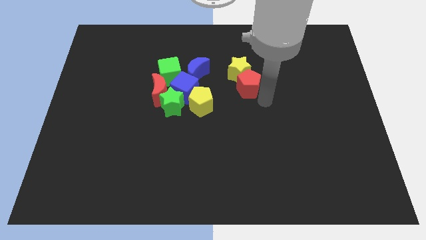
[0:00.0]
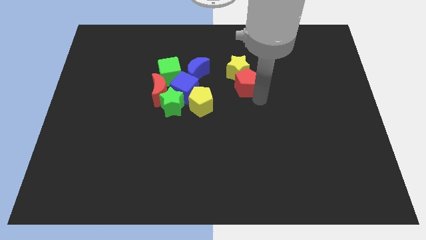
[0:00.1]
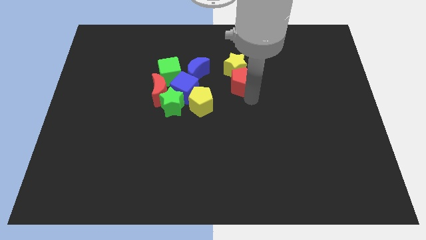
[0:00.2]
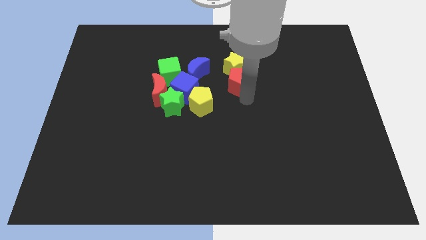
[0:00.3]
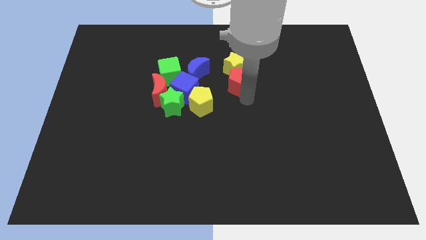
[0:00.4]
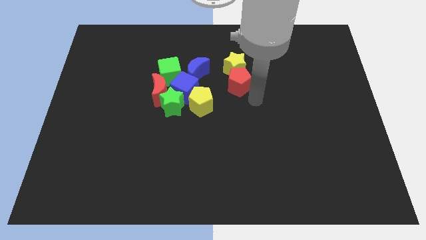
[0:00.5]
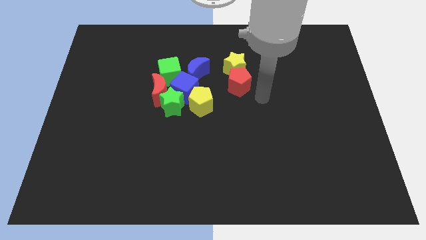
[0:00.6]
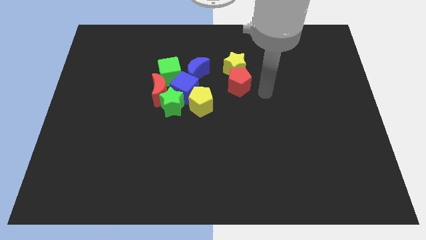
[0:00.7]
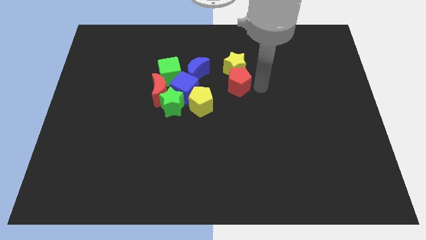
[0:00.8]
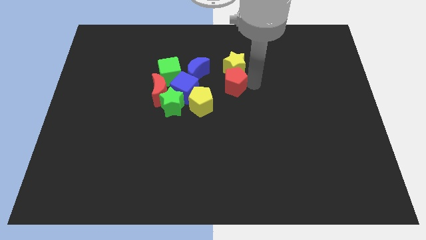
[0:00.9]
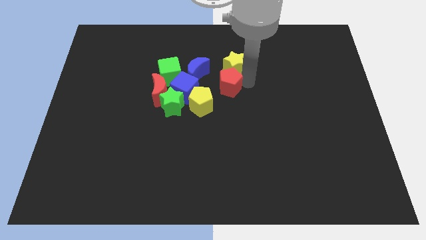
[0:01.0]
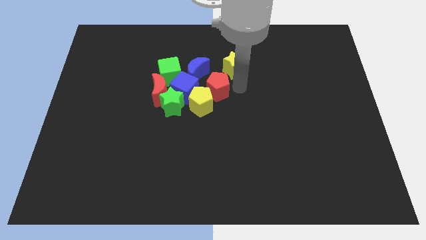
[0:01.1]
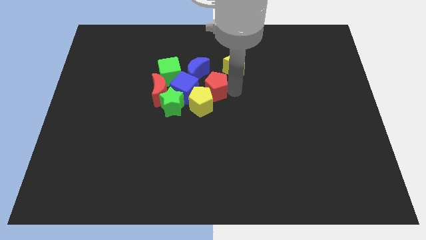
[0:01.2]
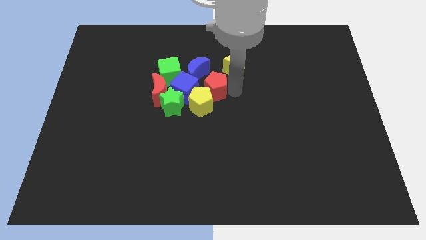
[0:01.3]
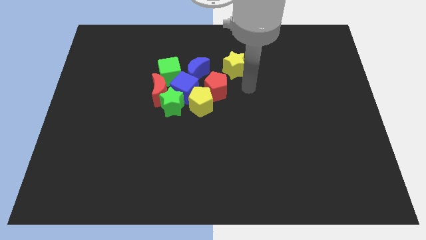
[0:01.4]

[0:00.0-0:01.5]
separate the red pentagon from the yellow star

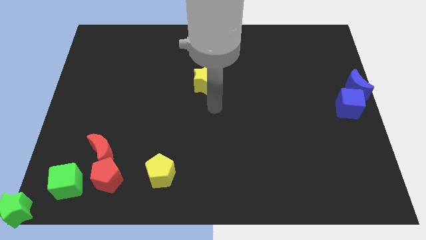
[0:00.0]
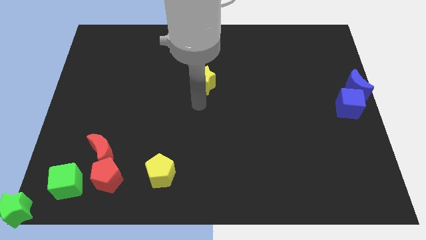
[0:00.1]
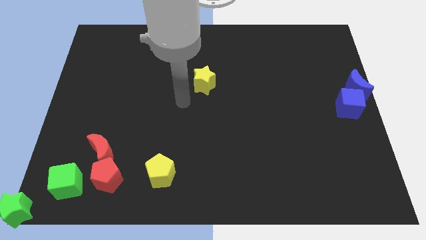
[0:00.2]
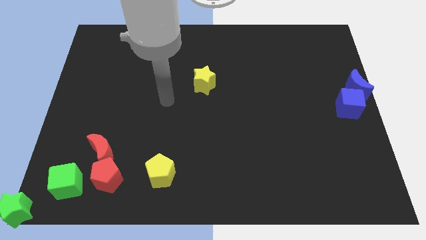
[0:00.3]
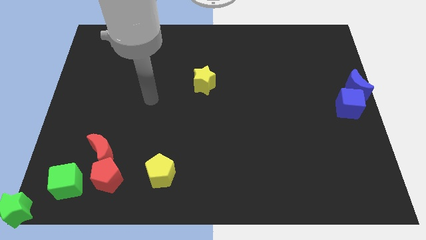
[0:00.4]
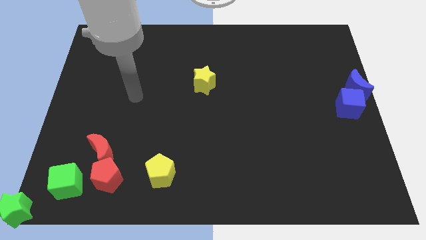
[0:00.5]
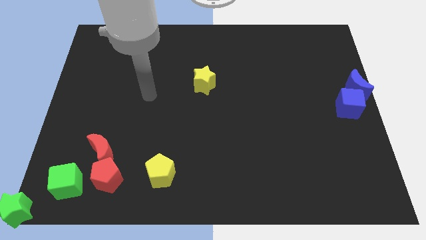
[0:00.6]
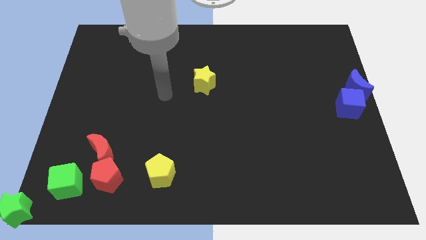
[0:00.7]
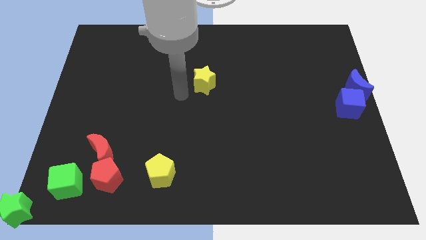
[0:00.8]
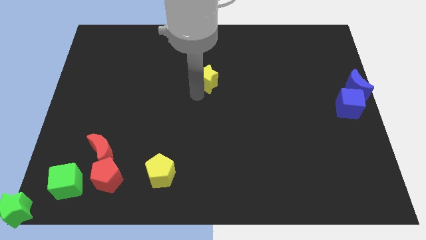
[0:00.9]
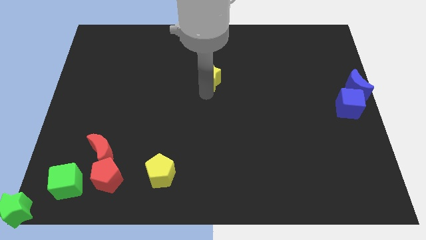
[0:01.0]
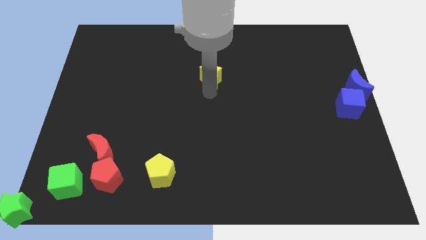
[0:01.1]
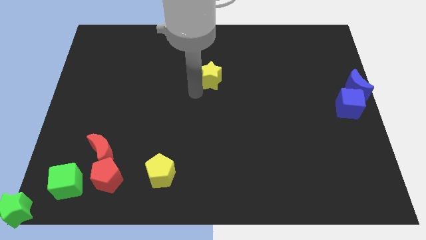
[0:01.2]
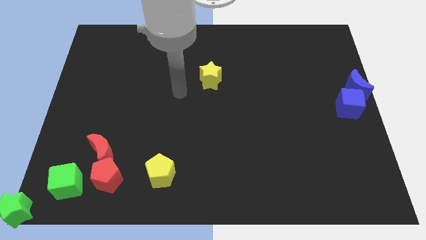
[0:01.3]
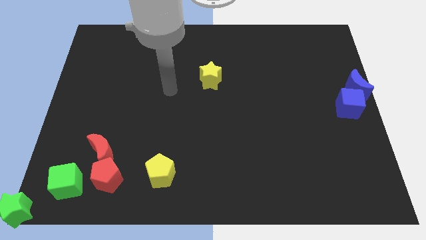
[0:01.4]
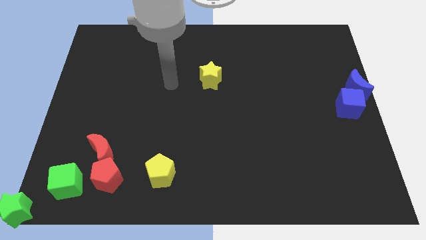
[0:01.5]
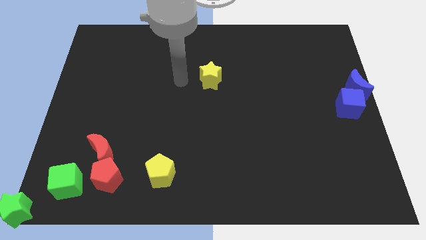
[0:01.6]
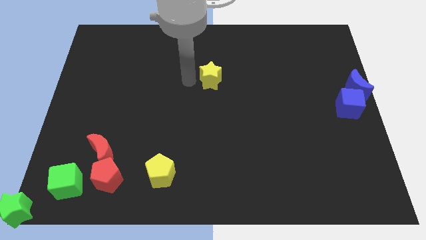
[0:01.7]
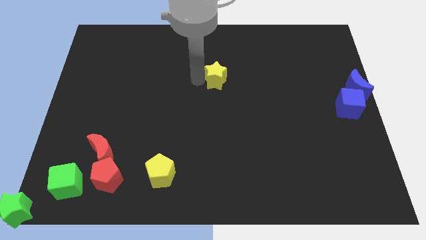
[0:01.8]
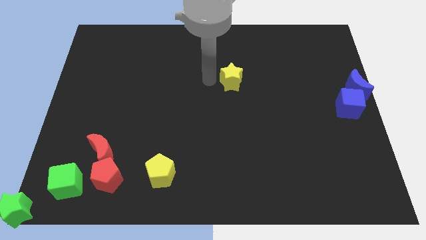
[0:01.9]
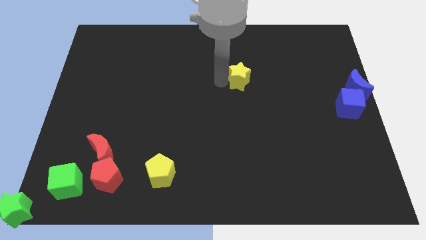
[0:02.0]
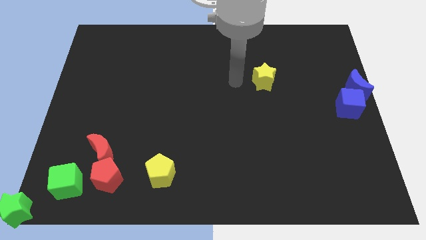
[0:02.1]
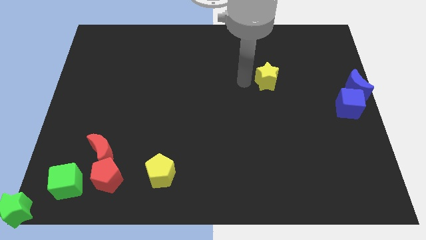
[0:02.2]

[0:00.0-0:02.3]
move the yellow star towards the right side

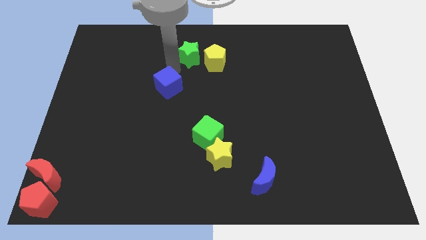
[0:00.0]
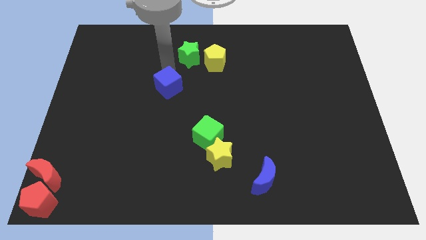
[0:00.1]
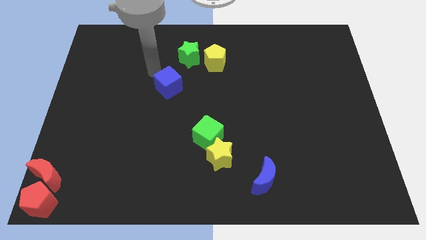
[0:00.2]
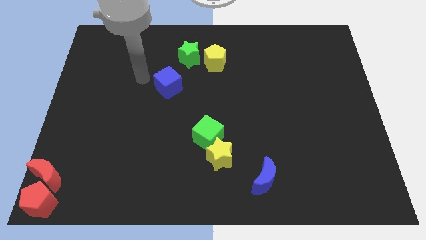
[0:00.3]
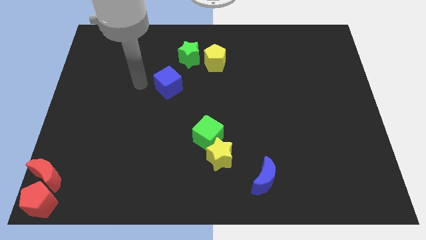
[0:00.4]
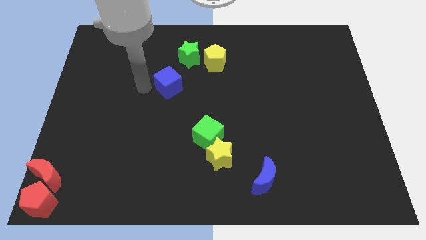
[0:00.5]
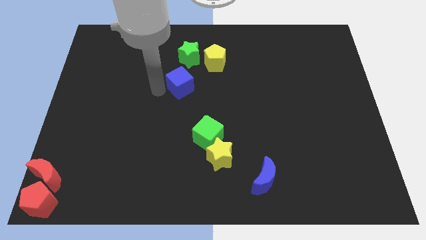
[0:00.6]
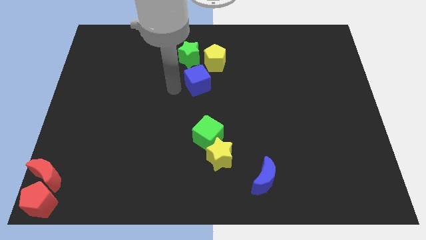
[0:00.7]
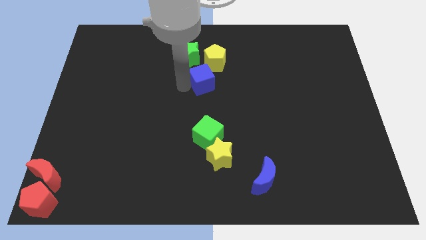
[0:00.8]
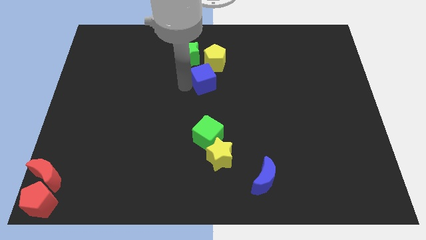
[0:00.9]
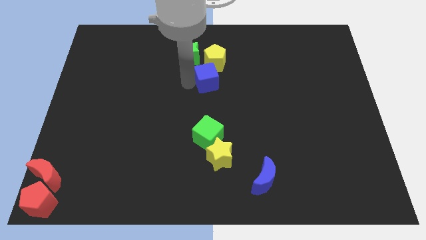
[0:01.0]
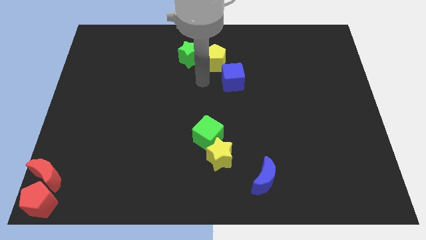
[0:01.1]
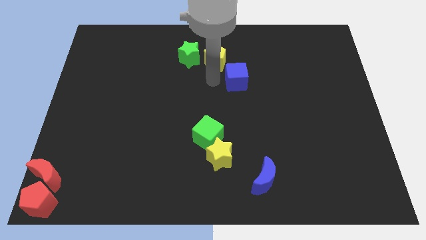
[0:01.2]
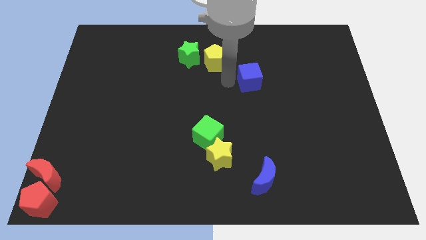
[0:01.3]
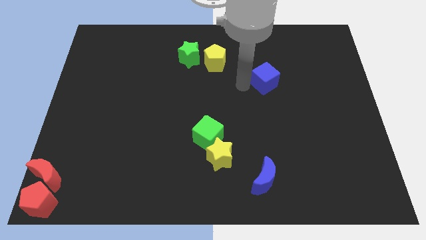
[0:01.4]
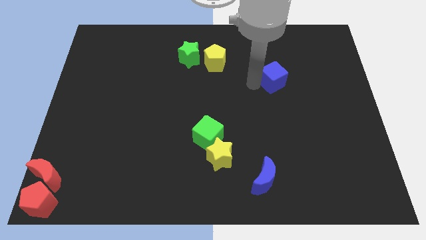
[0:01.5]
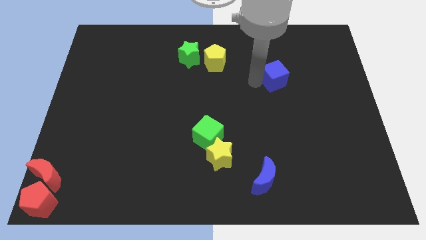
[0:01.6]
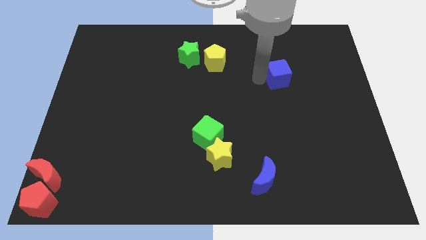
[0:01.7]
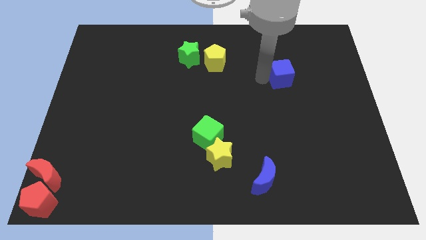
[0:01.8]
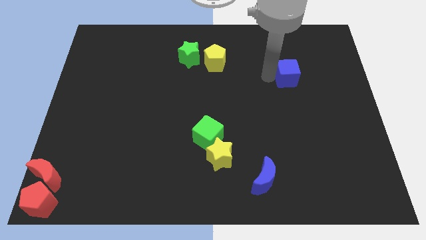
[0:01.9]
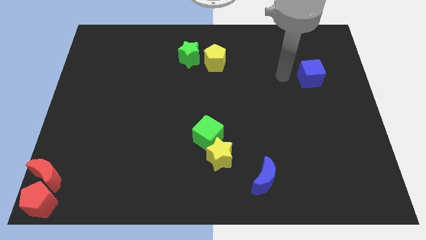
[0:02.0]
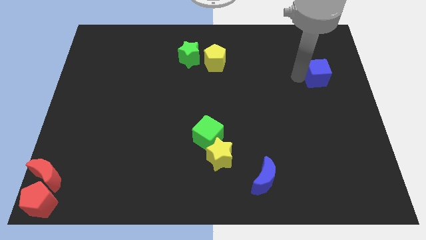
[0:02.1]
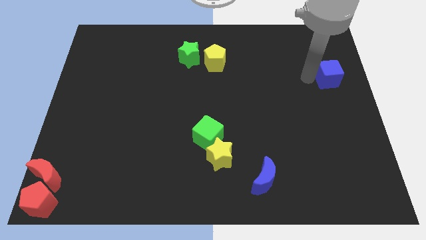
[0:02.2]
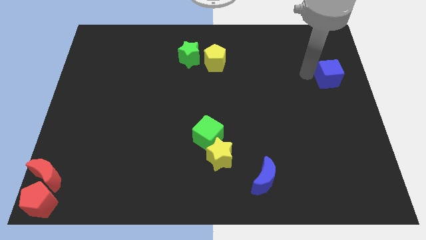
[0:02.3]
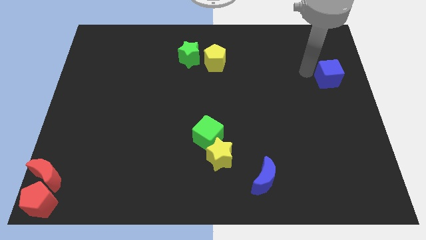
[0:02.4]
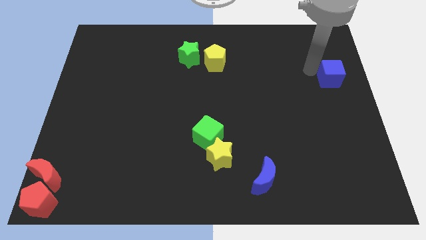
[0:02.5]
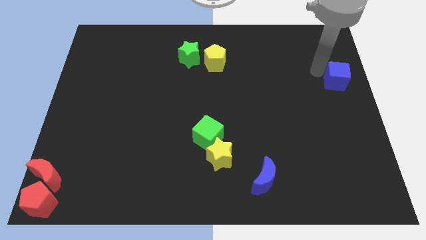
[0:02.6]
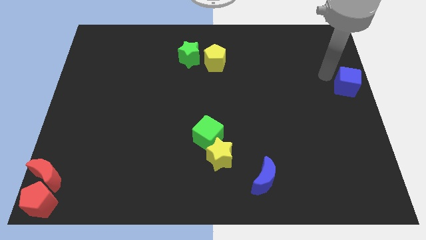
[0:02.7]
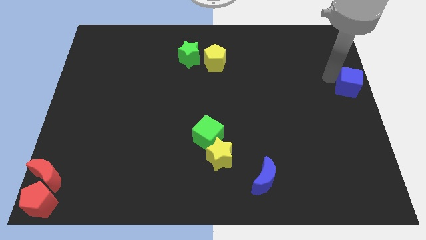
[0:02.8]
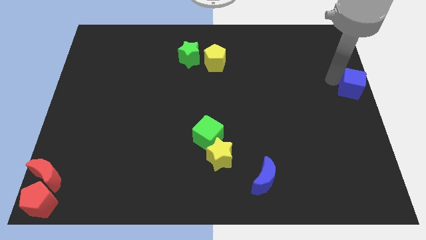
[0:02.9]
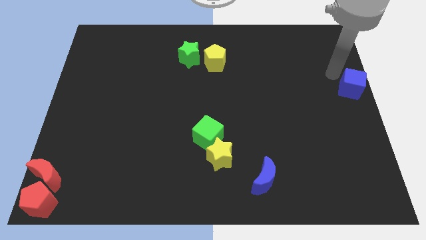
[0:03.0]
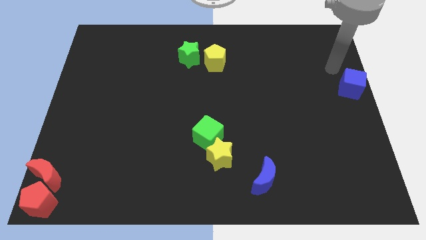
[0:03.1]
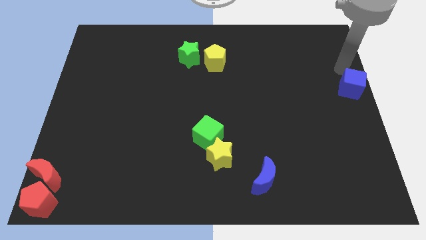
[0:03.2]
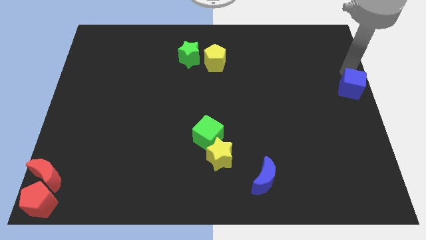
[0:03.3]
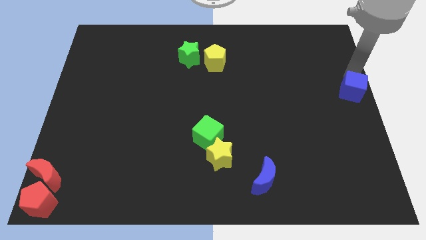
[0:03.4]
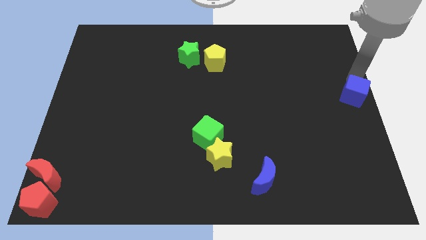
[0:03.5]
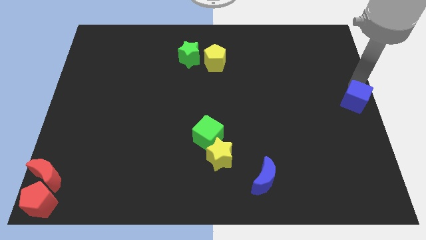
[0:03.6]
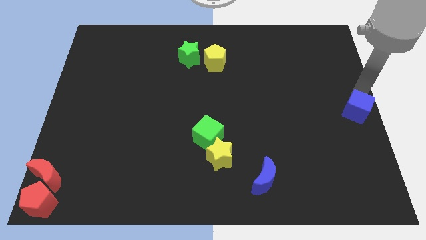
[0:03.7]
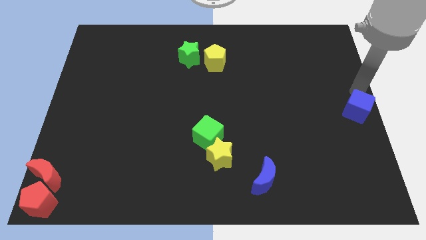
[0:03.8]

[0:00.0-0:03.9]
push the blue cube to the right center of the board

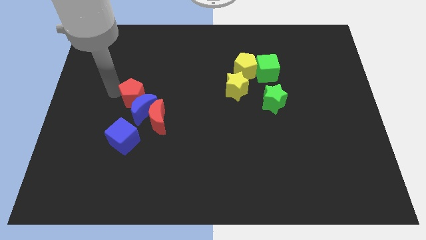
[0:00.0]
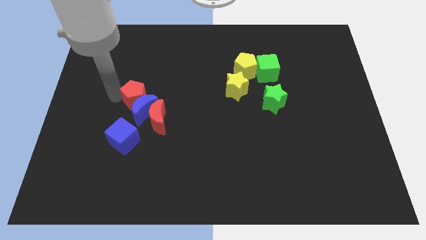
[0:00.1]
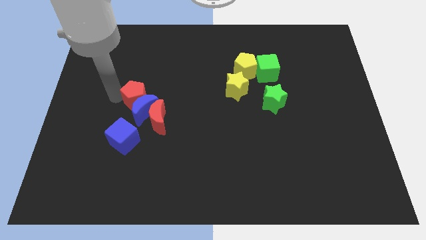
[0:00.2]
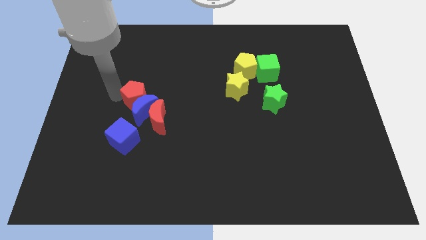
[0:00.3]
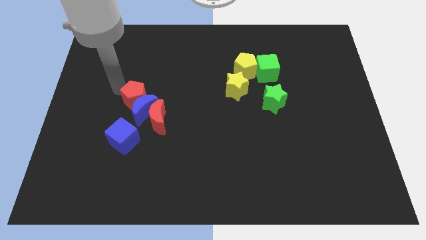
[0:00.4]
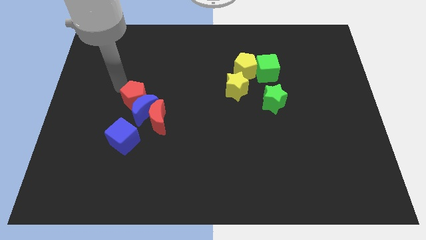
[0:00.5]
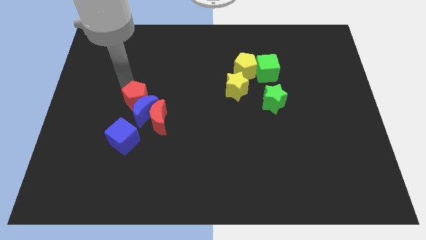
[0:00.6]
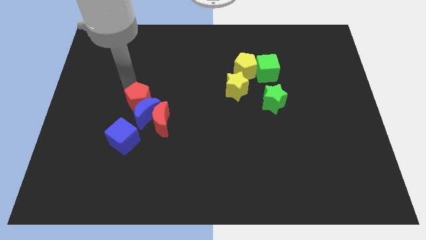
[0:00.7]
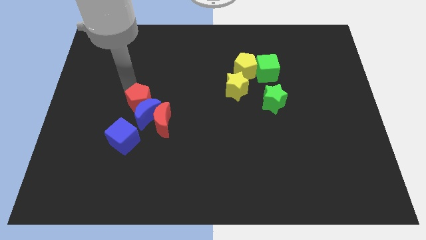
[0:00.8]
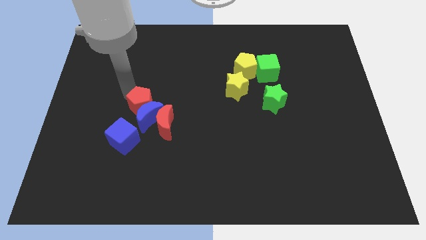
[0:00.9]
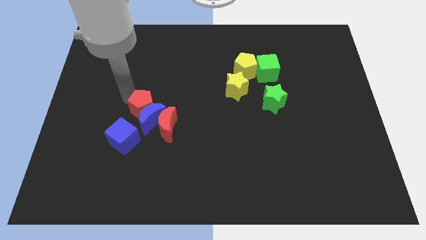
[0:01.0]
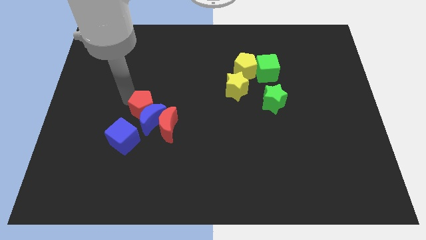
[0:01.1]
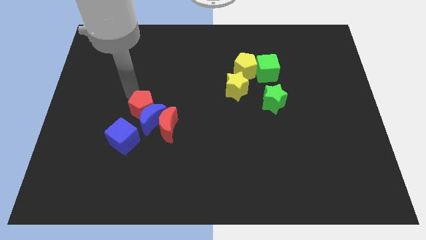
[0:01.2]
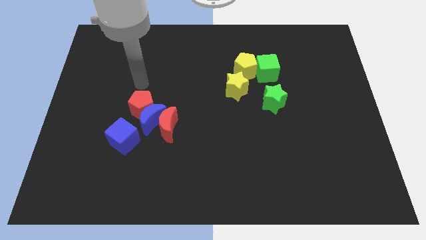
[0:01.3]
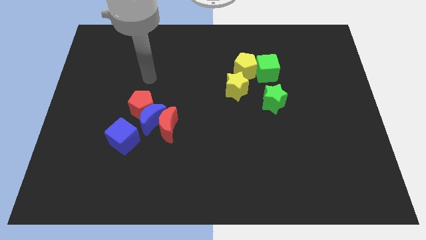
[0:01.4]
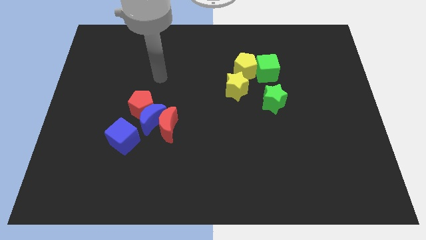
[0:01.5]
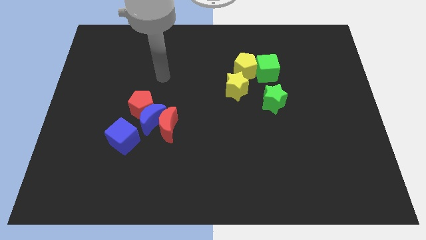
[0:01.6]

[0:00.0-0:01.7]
push red pentagon in to blue moon
